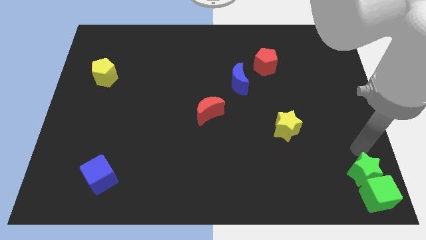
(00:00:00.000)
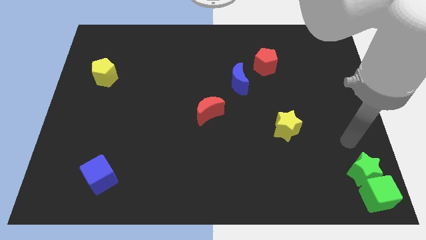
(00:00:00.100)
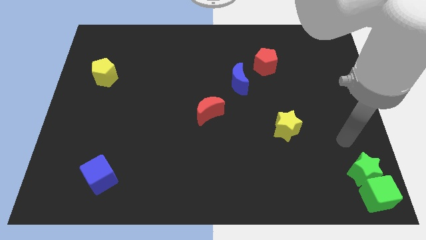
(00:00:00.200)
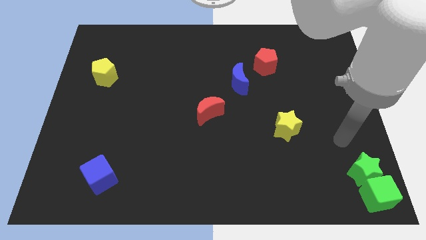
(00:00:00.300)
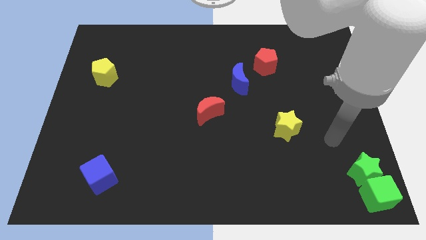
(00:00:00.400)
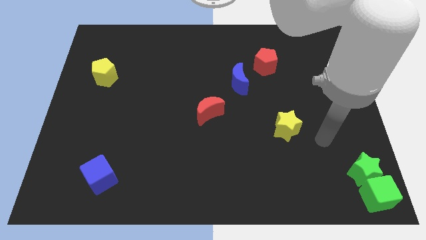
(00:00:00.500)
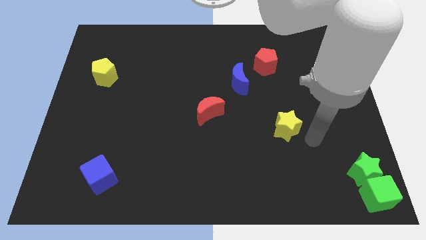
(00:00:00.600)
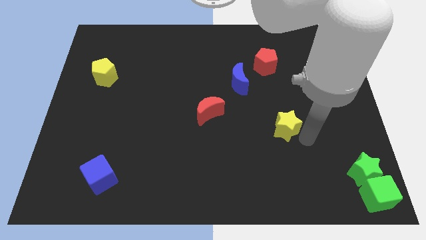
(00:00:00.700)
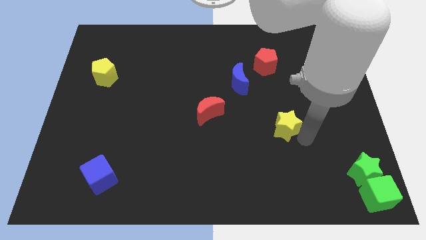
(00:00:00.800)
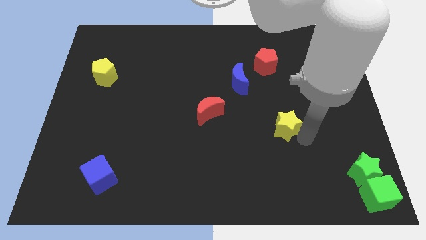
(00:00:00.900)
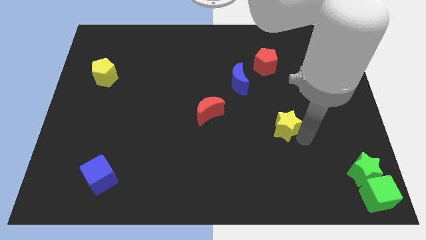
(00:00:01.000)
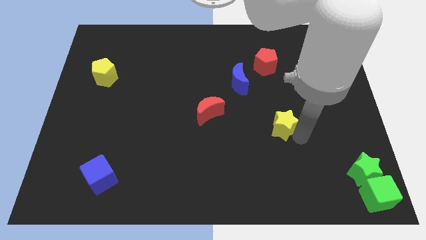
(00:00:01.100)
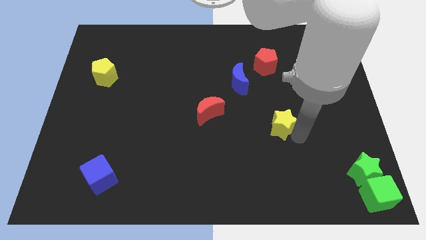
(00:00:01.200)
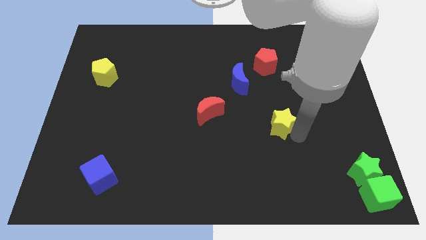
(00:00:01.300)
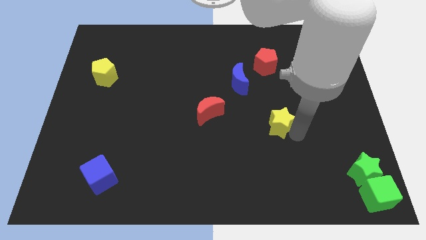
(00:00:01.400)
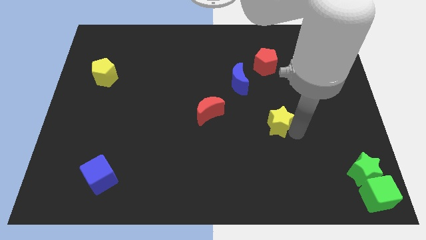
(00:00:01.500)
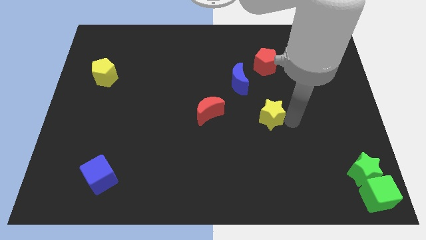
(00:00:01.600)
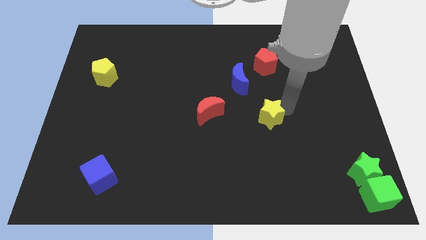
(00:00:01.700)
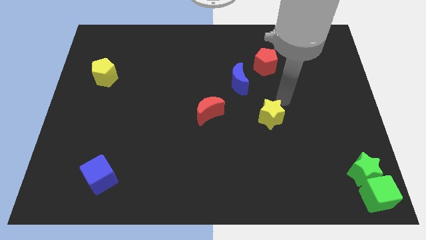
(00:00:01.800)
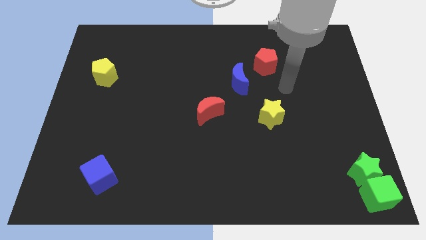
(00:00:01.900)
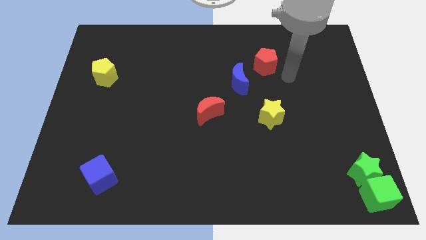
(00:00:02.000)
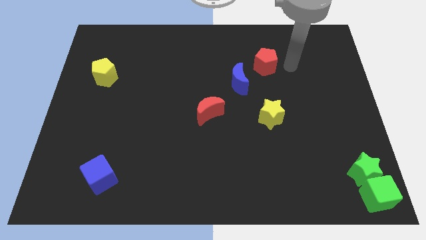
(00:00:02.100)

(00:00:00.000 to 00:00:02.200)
slightly push the yellow star upwards

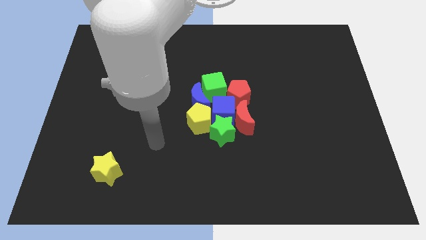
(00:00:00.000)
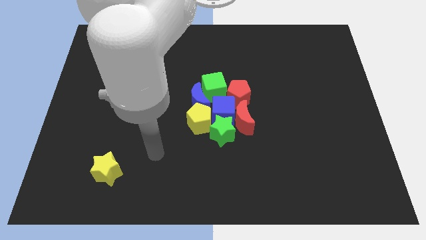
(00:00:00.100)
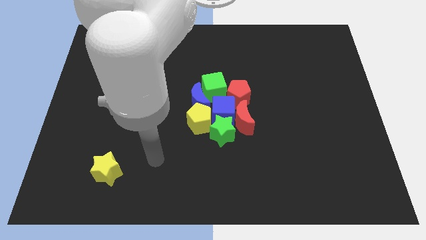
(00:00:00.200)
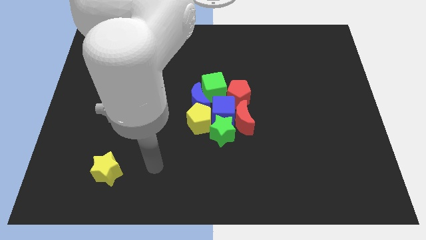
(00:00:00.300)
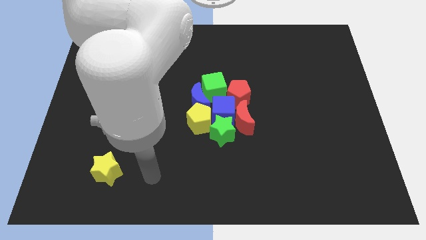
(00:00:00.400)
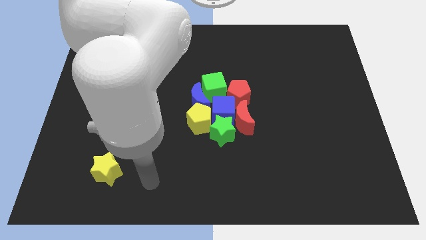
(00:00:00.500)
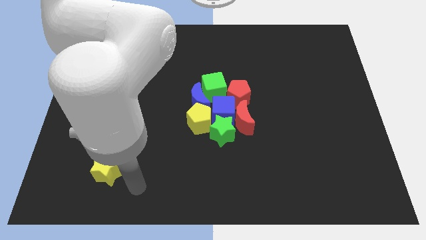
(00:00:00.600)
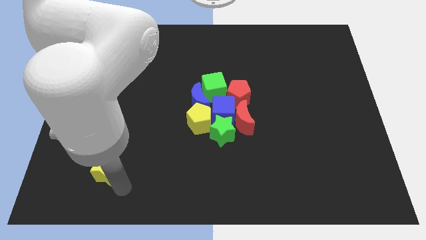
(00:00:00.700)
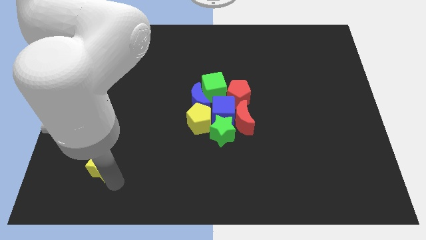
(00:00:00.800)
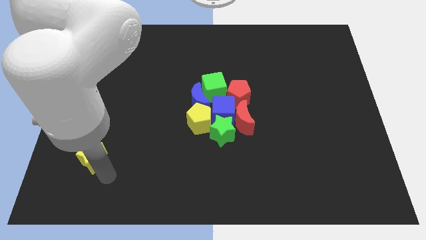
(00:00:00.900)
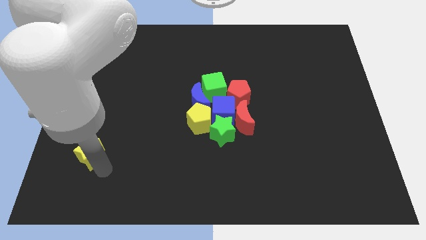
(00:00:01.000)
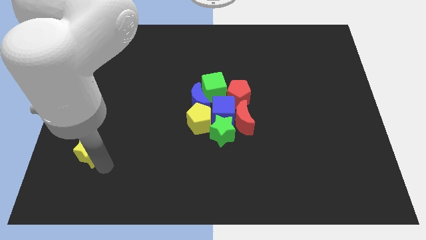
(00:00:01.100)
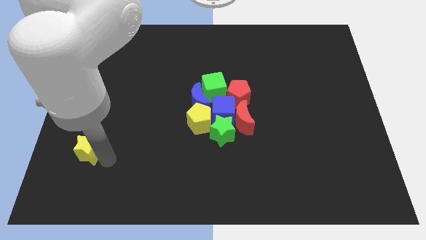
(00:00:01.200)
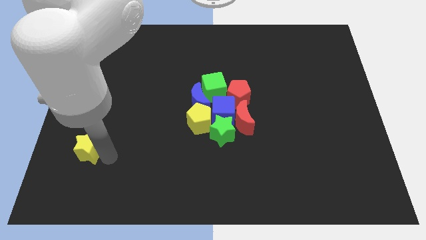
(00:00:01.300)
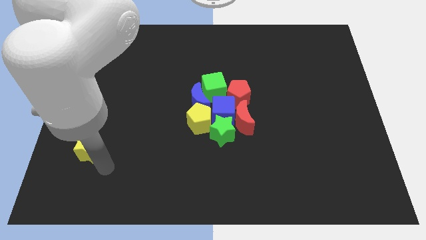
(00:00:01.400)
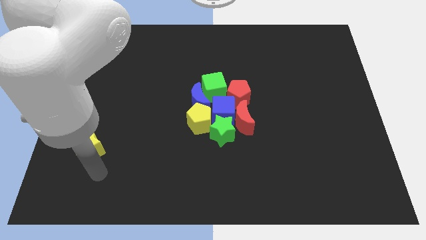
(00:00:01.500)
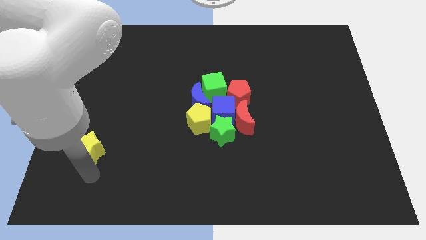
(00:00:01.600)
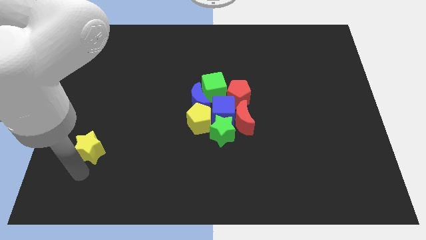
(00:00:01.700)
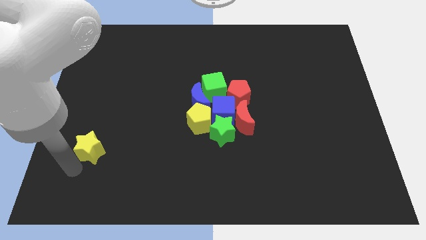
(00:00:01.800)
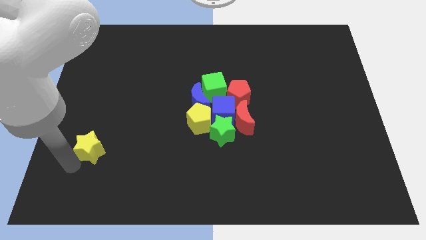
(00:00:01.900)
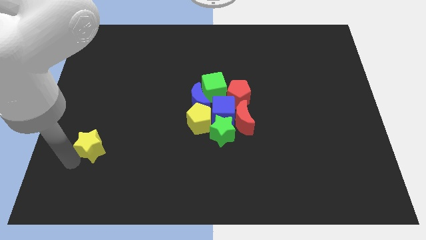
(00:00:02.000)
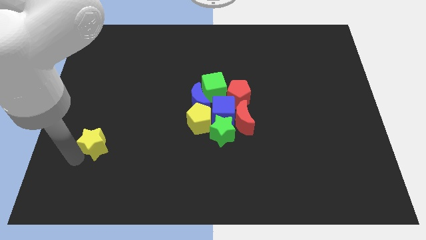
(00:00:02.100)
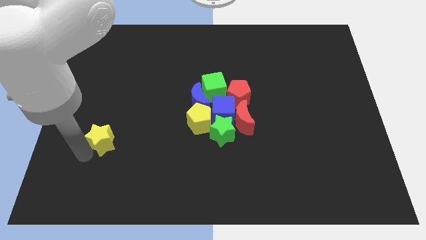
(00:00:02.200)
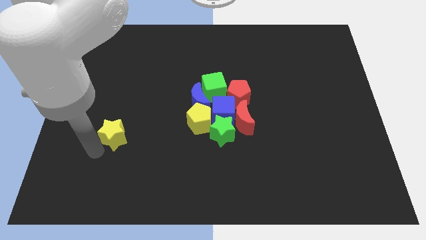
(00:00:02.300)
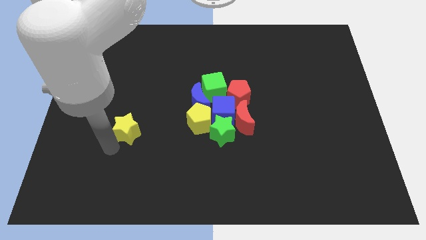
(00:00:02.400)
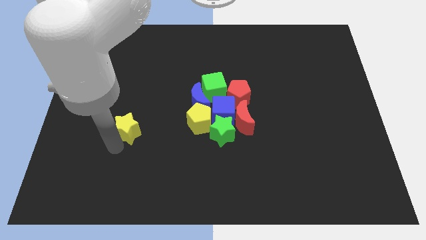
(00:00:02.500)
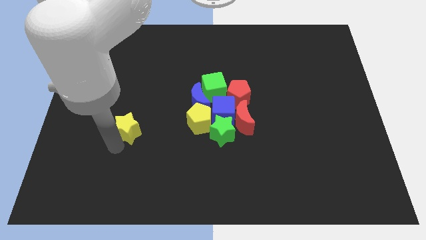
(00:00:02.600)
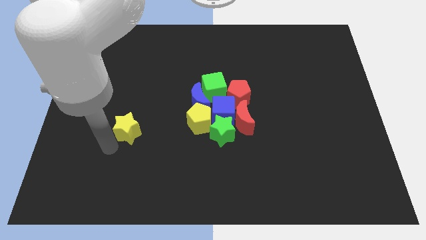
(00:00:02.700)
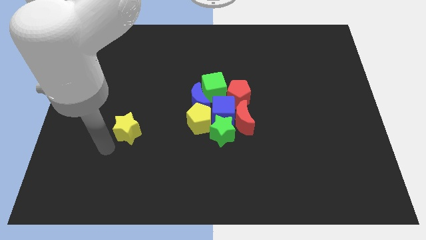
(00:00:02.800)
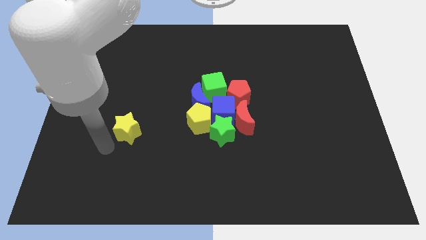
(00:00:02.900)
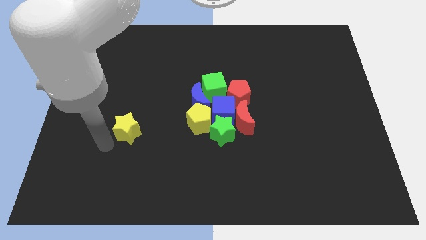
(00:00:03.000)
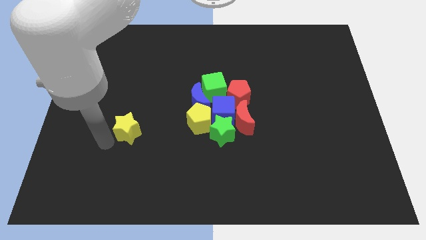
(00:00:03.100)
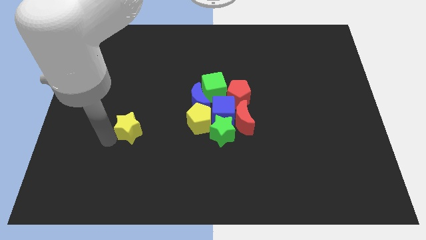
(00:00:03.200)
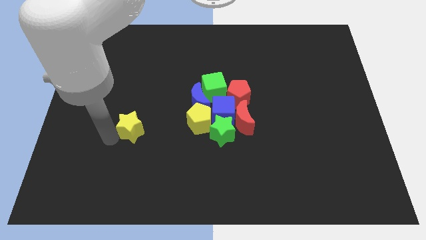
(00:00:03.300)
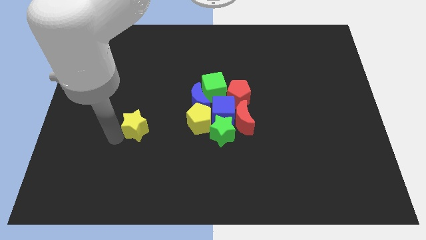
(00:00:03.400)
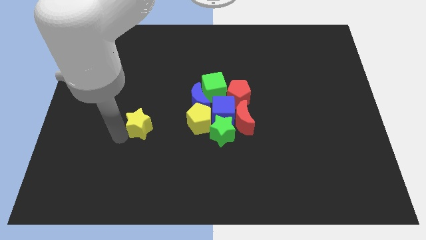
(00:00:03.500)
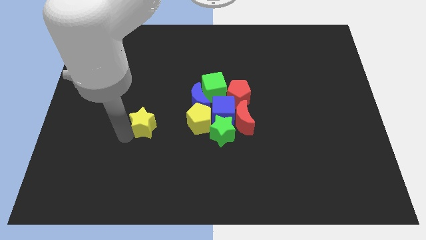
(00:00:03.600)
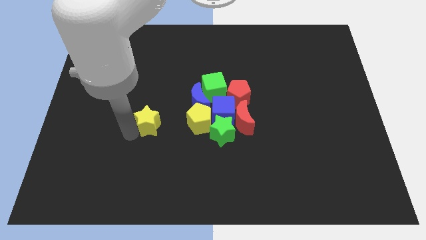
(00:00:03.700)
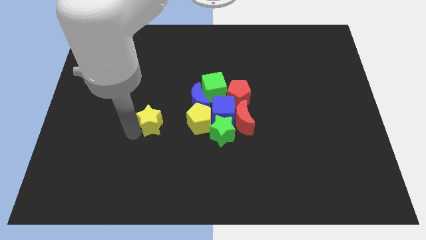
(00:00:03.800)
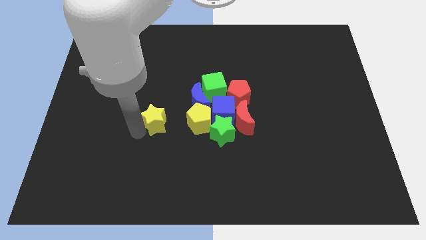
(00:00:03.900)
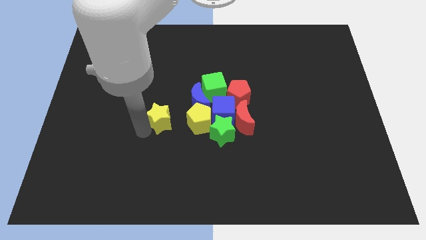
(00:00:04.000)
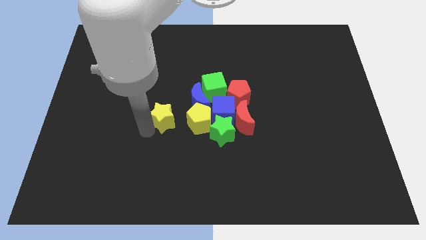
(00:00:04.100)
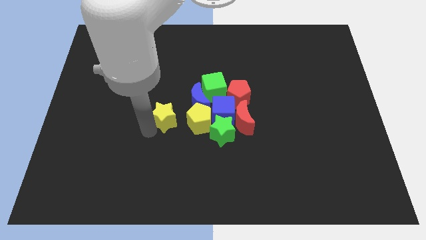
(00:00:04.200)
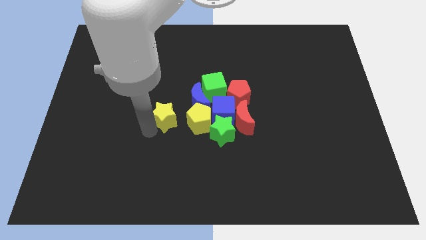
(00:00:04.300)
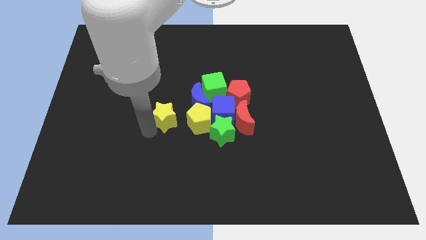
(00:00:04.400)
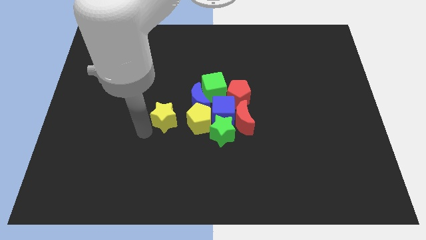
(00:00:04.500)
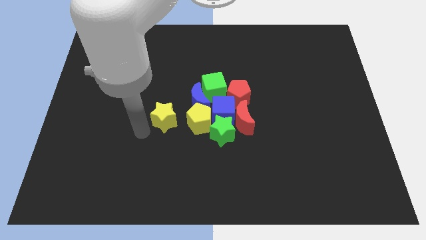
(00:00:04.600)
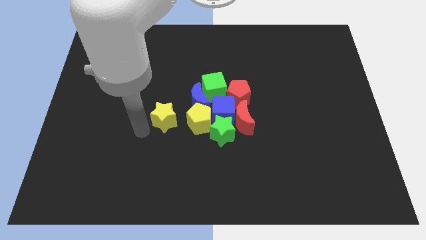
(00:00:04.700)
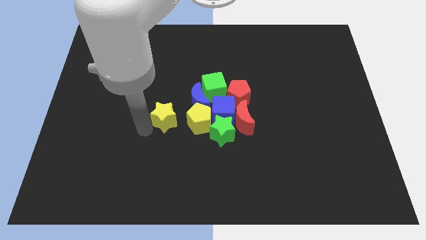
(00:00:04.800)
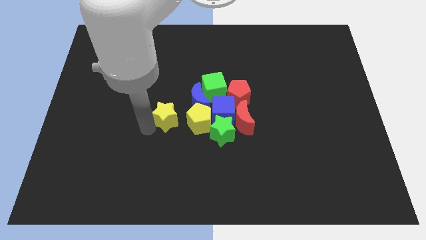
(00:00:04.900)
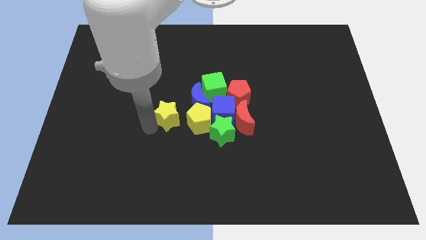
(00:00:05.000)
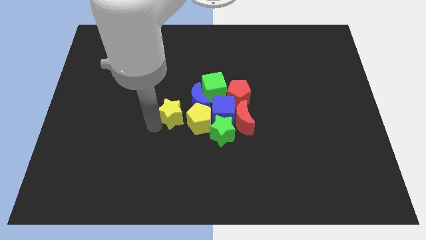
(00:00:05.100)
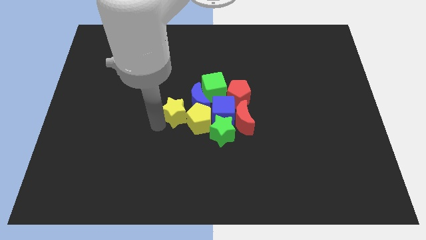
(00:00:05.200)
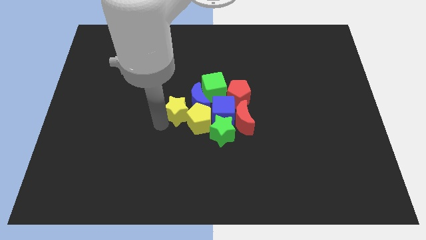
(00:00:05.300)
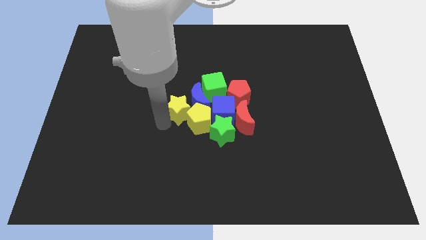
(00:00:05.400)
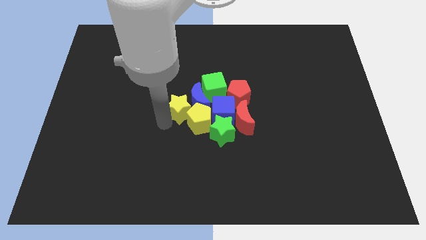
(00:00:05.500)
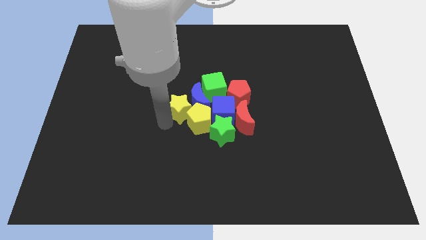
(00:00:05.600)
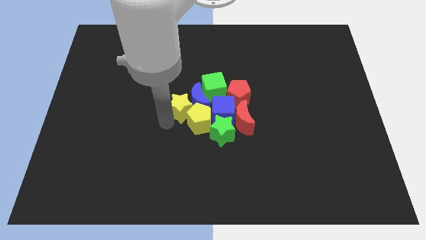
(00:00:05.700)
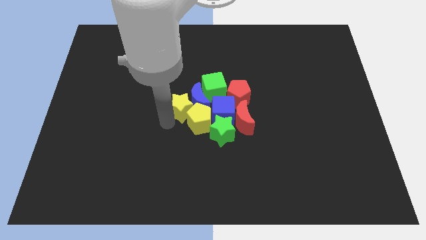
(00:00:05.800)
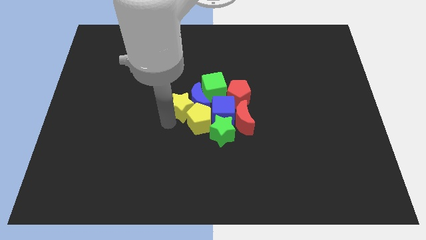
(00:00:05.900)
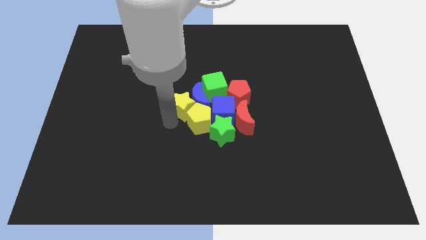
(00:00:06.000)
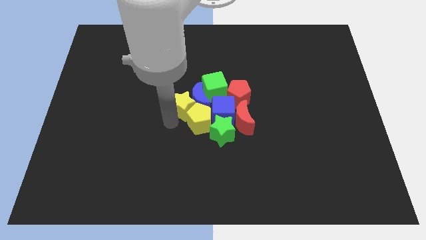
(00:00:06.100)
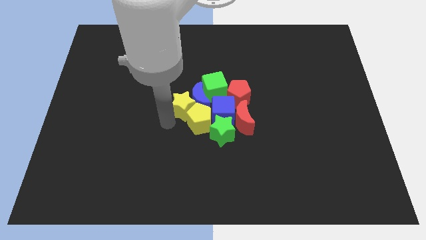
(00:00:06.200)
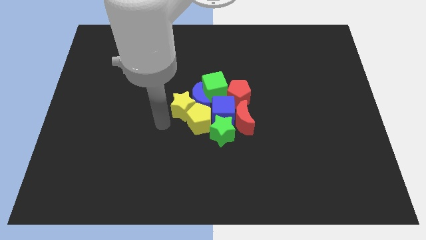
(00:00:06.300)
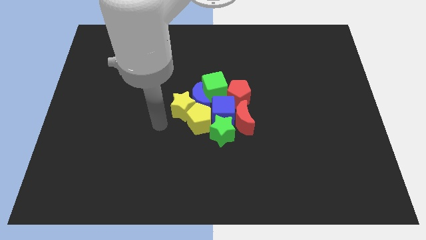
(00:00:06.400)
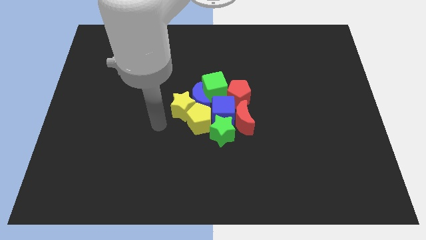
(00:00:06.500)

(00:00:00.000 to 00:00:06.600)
push the yellow star into the group of blocks
